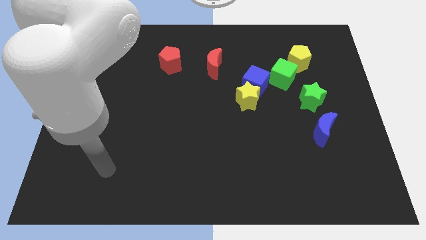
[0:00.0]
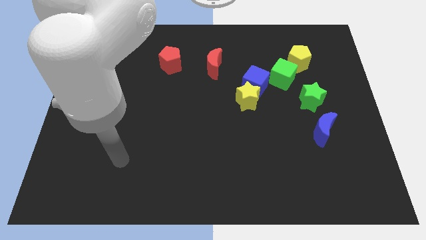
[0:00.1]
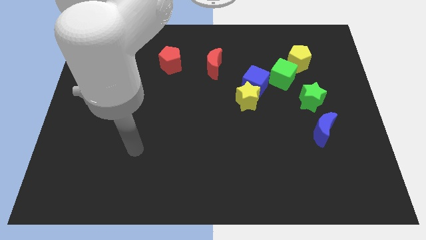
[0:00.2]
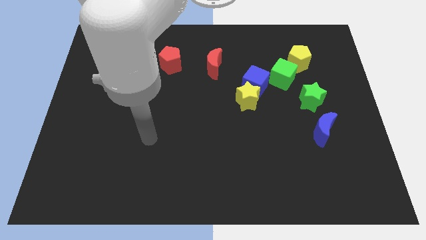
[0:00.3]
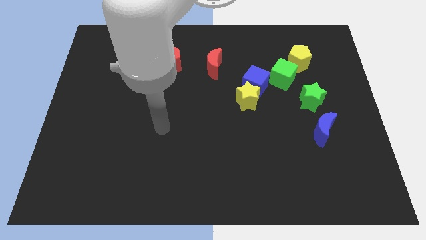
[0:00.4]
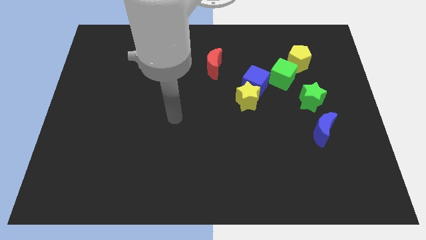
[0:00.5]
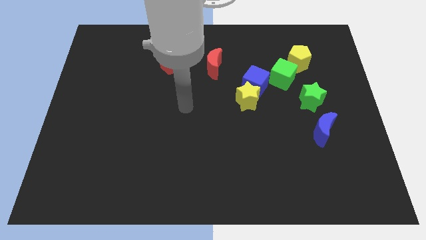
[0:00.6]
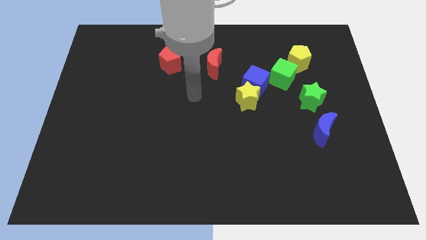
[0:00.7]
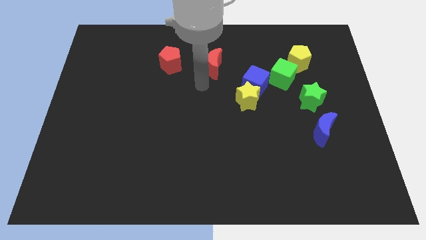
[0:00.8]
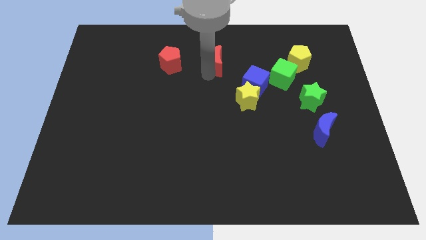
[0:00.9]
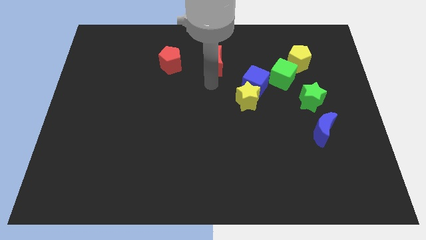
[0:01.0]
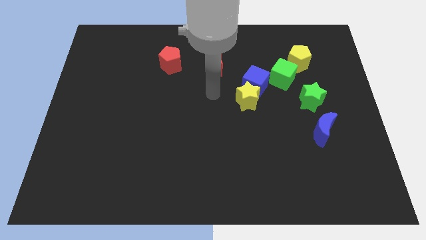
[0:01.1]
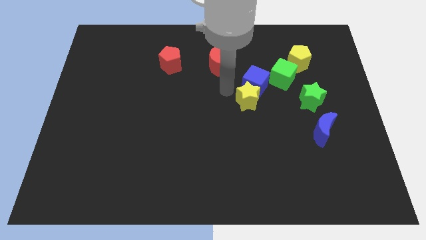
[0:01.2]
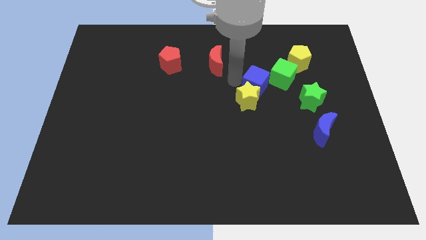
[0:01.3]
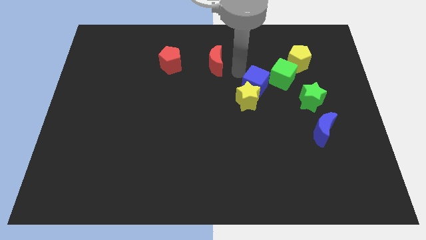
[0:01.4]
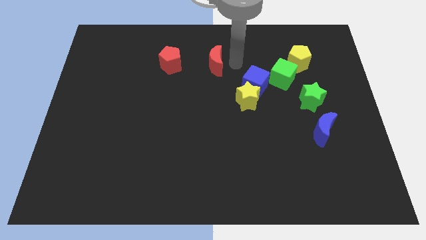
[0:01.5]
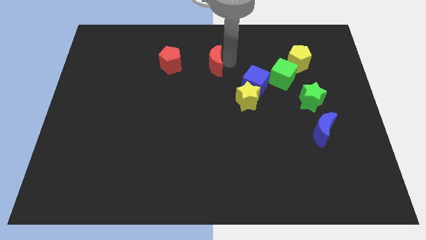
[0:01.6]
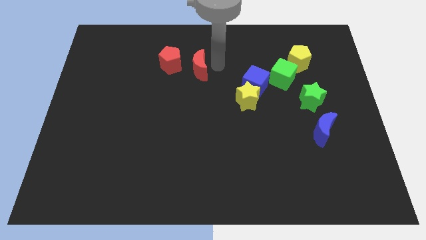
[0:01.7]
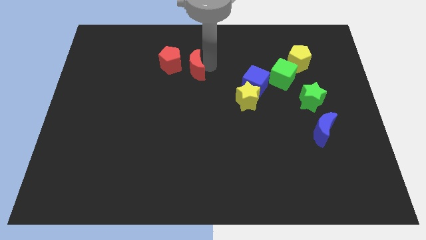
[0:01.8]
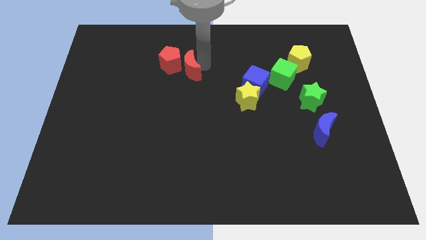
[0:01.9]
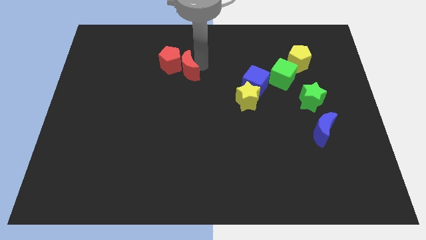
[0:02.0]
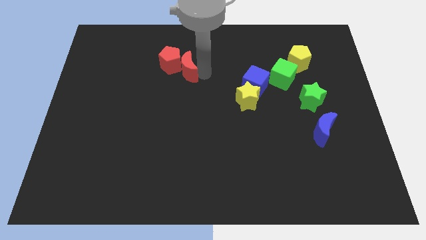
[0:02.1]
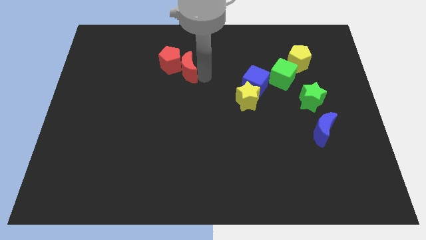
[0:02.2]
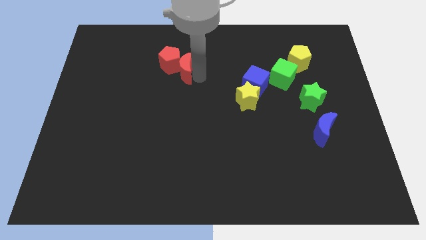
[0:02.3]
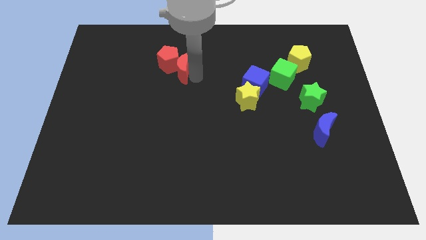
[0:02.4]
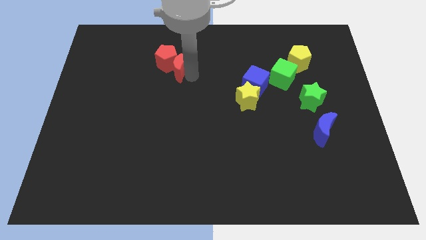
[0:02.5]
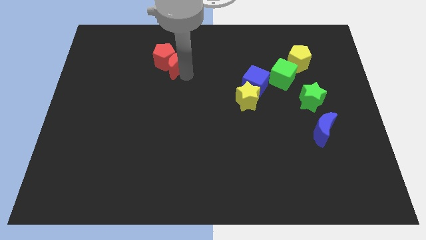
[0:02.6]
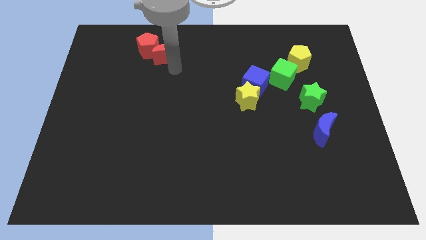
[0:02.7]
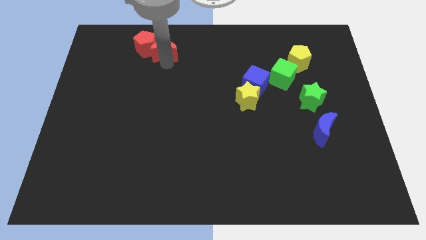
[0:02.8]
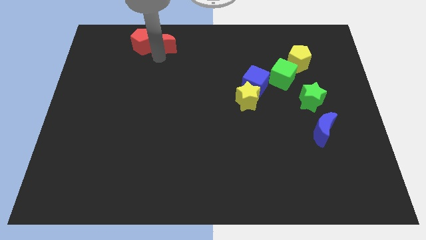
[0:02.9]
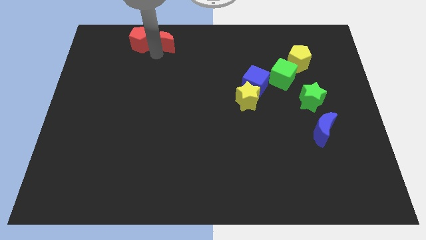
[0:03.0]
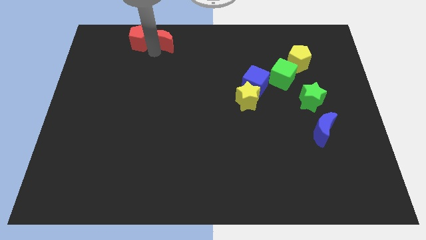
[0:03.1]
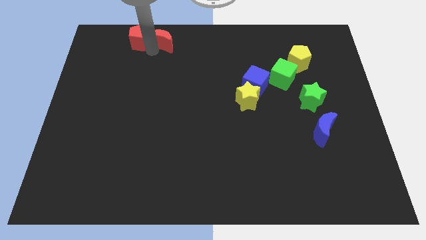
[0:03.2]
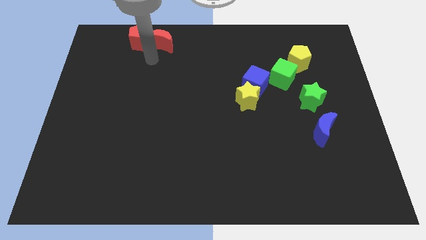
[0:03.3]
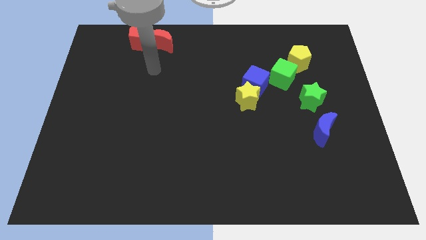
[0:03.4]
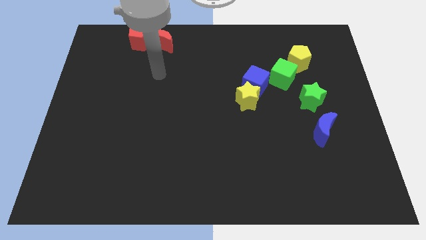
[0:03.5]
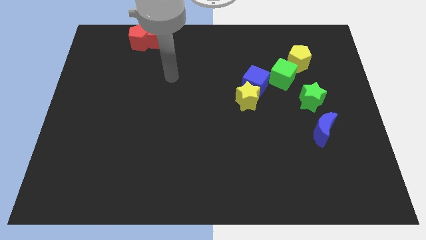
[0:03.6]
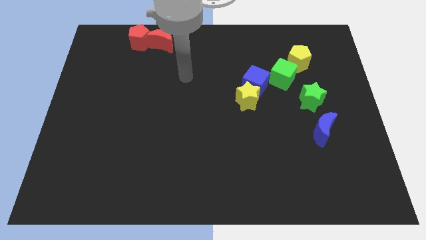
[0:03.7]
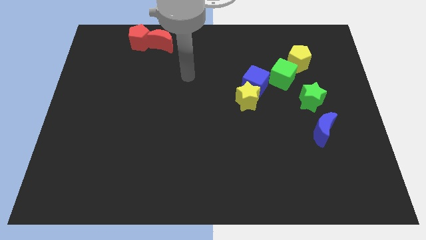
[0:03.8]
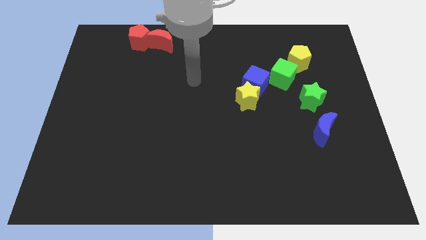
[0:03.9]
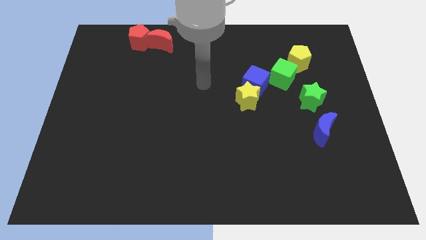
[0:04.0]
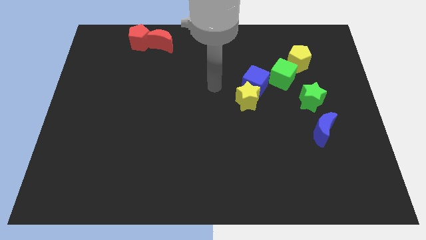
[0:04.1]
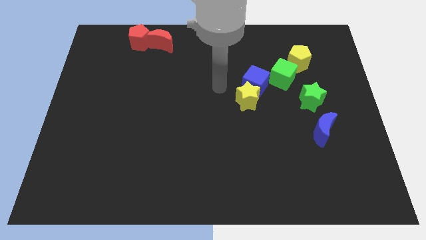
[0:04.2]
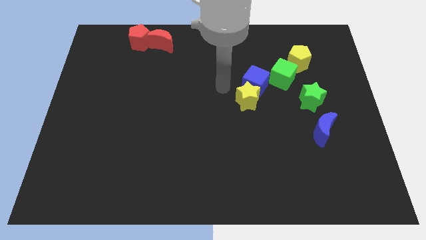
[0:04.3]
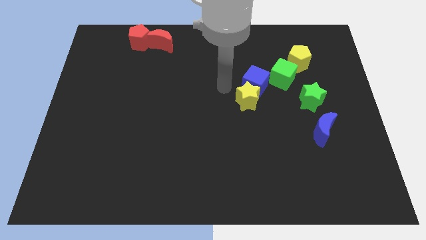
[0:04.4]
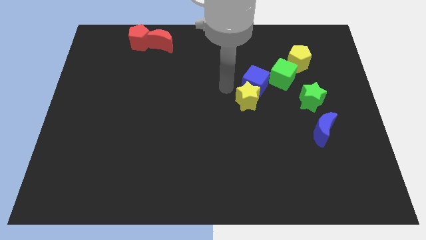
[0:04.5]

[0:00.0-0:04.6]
push red moon and red pentagon towards the top

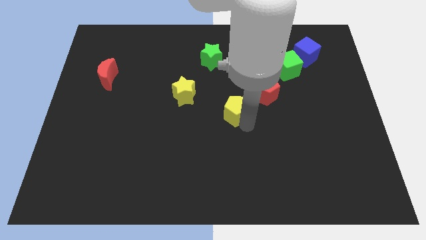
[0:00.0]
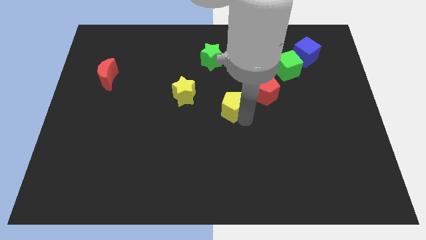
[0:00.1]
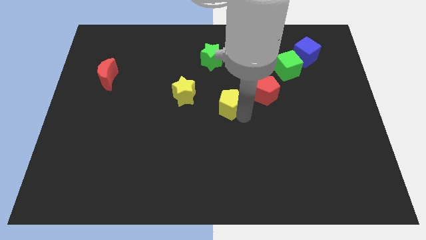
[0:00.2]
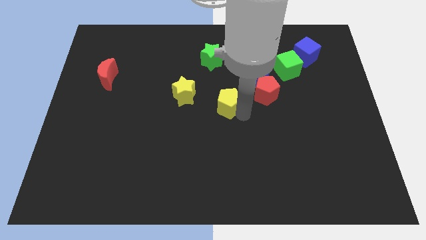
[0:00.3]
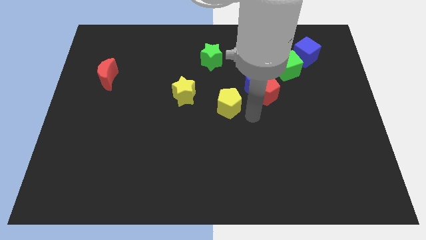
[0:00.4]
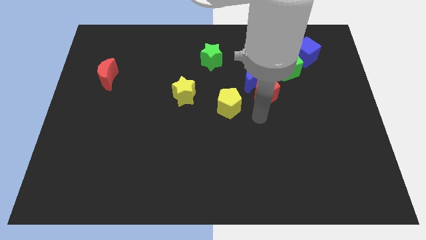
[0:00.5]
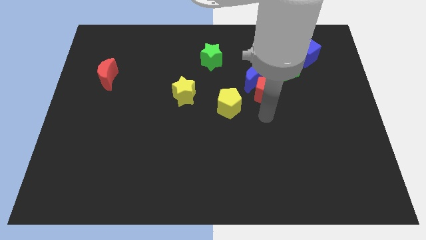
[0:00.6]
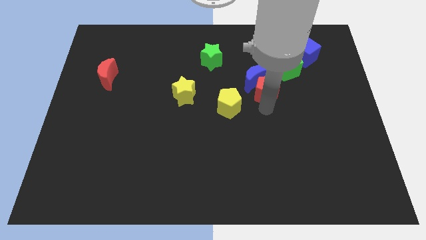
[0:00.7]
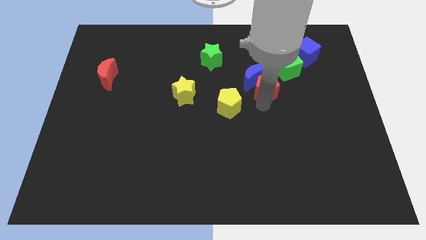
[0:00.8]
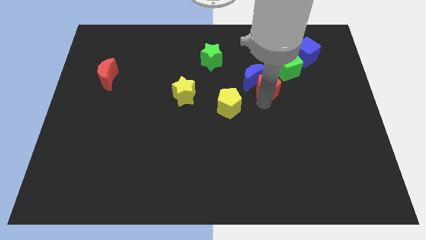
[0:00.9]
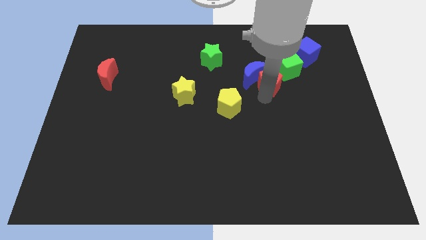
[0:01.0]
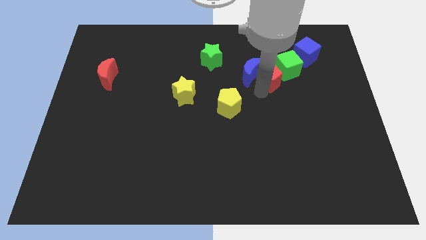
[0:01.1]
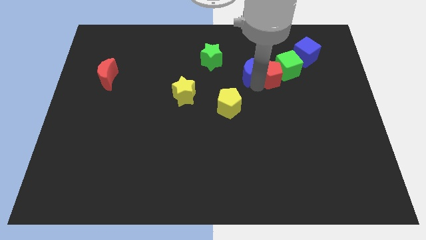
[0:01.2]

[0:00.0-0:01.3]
push the yellow pentagon towards the center

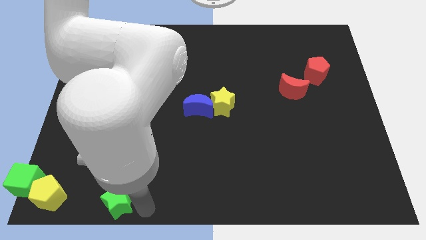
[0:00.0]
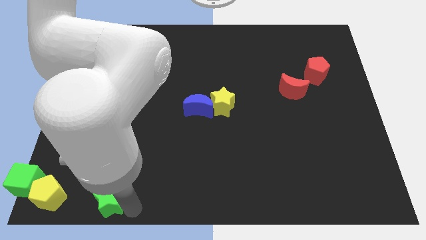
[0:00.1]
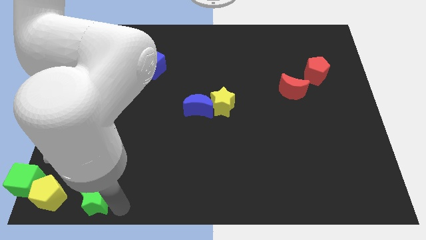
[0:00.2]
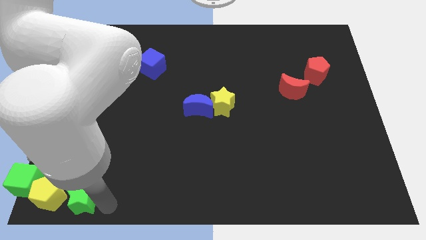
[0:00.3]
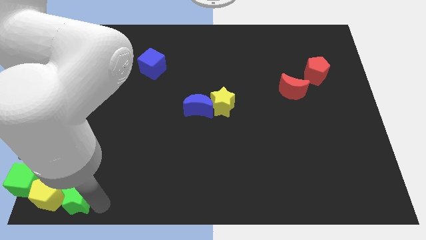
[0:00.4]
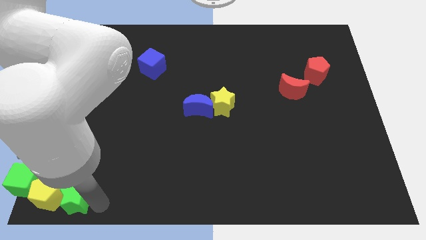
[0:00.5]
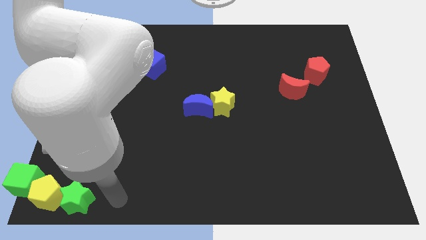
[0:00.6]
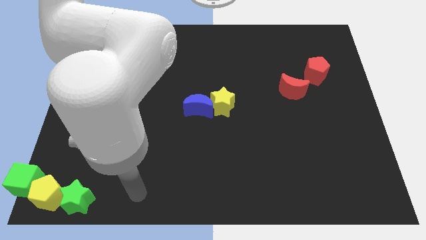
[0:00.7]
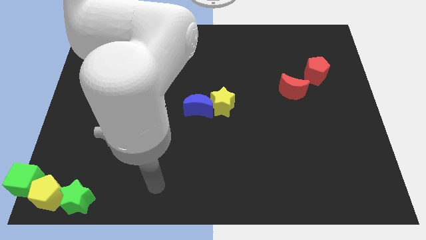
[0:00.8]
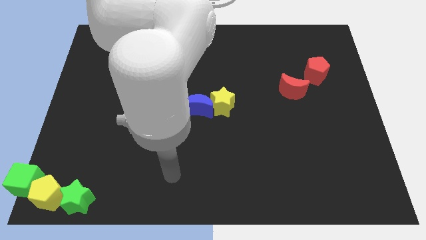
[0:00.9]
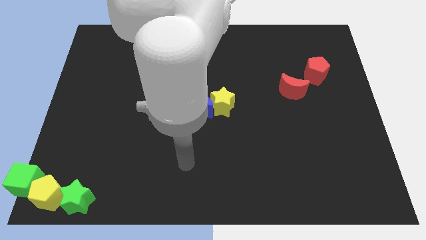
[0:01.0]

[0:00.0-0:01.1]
place the green star to the right side of the yellow pentagon

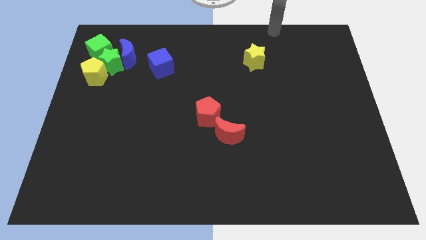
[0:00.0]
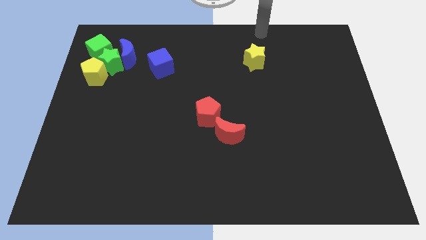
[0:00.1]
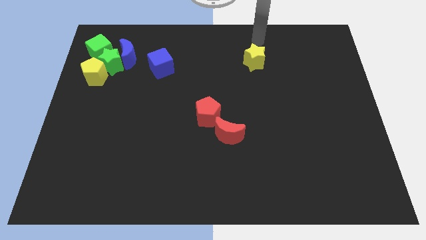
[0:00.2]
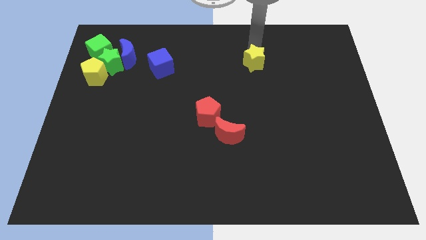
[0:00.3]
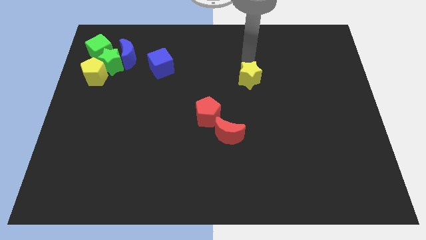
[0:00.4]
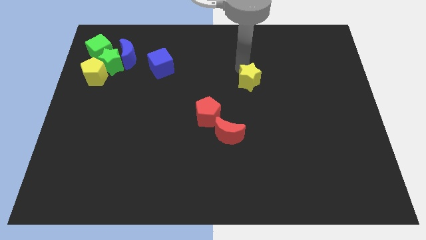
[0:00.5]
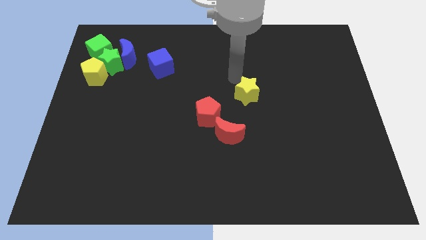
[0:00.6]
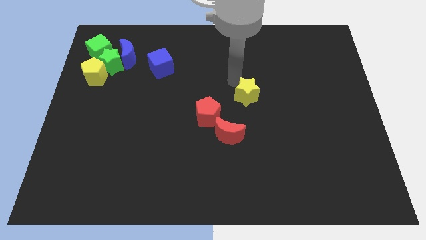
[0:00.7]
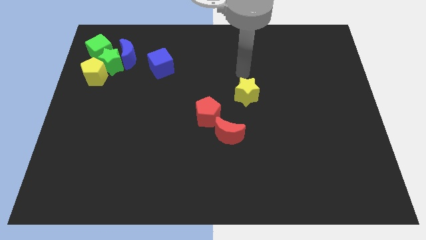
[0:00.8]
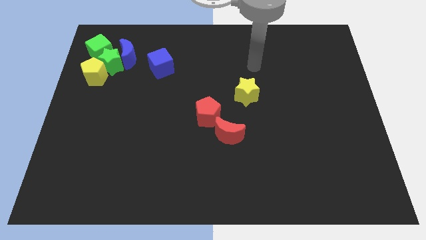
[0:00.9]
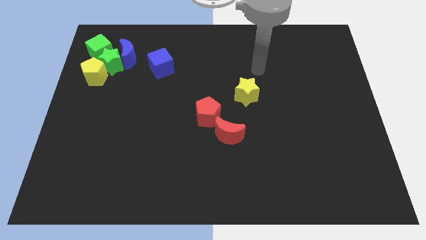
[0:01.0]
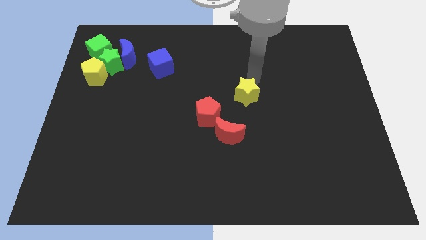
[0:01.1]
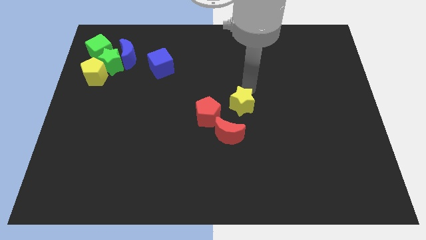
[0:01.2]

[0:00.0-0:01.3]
place the yellow star above the red crescent

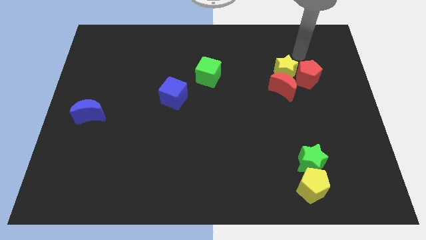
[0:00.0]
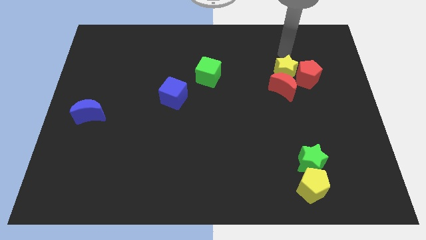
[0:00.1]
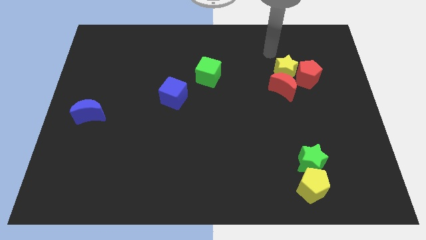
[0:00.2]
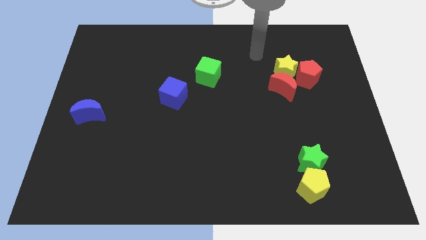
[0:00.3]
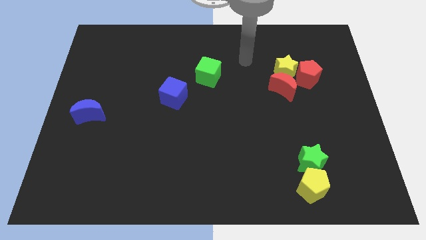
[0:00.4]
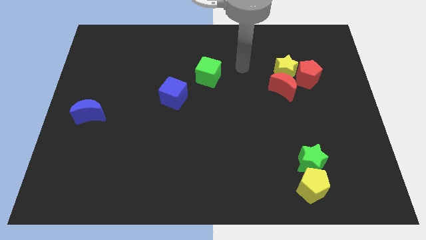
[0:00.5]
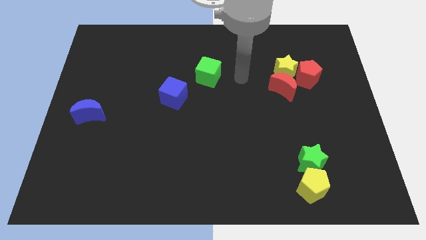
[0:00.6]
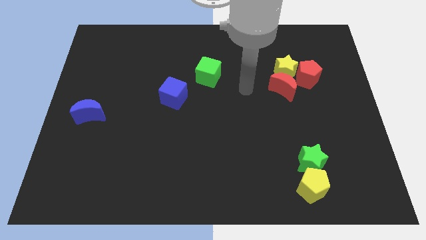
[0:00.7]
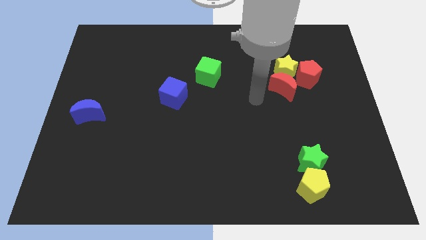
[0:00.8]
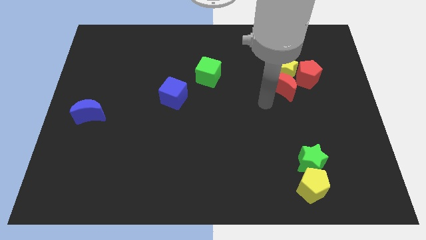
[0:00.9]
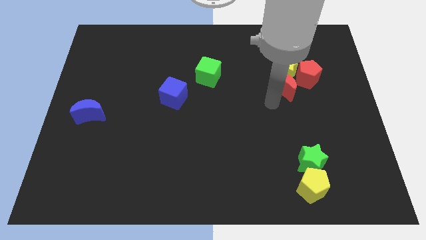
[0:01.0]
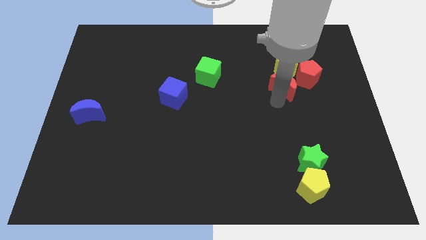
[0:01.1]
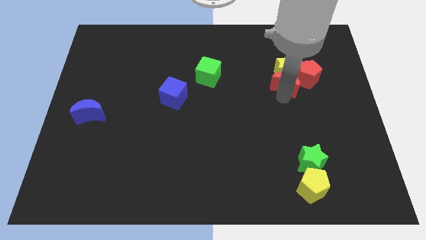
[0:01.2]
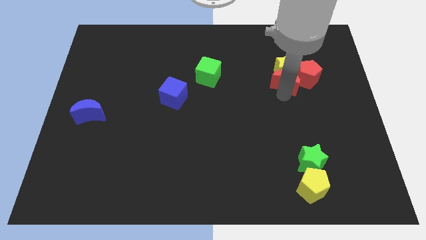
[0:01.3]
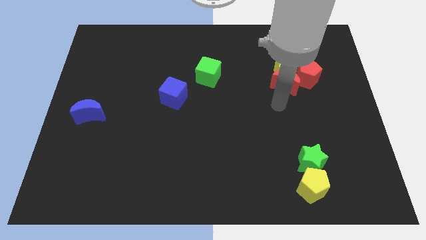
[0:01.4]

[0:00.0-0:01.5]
place red moon to the bottom of yellow star
